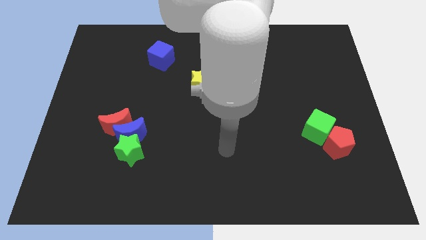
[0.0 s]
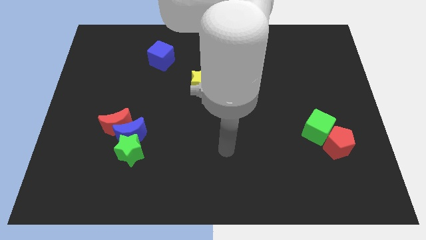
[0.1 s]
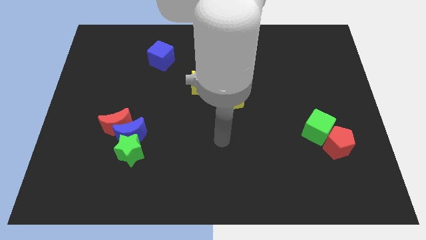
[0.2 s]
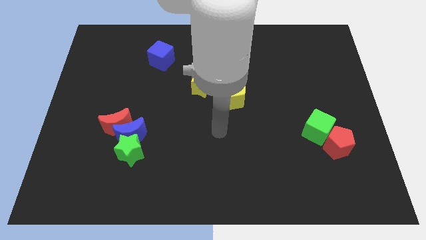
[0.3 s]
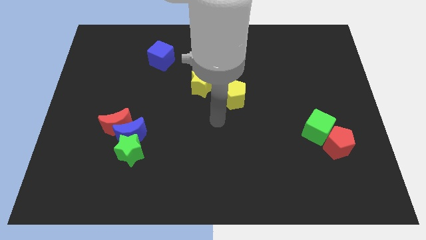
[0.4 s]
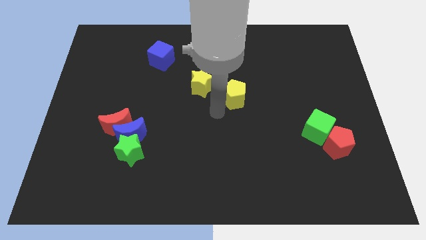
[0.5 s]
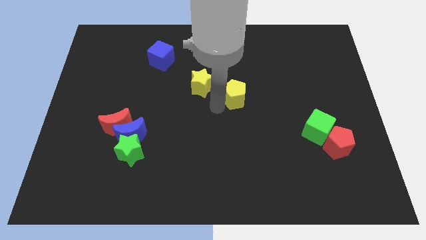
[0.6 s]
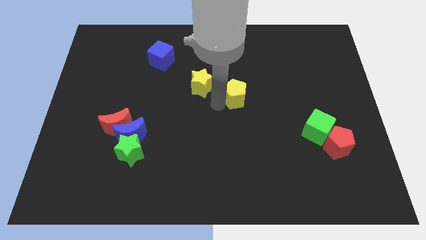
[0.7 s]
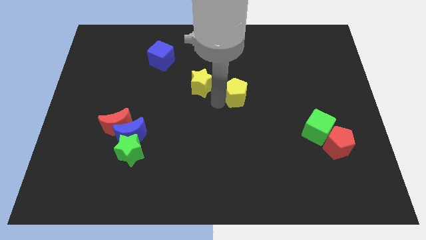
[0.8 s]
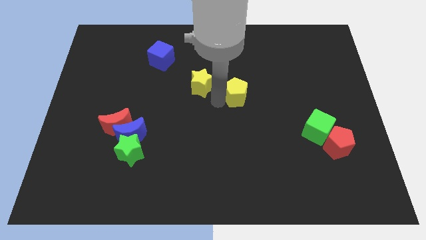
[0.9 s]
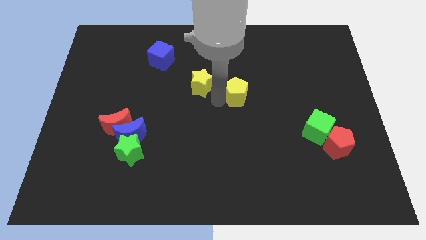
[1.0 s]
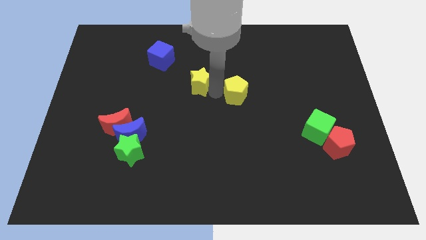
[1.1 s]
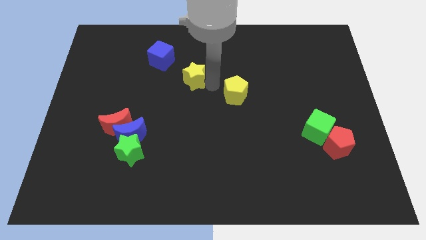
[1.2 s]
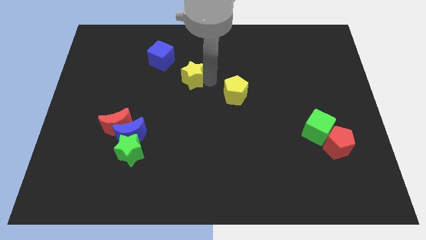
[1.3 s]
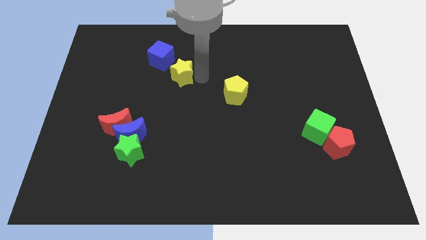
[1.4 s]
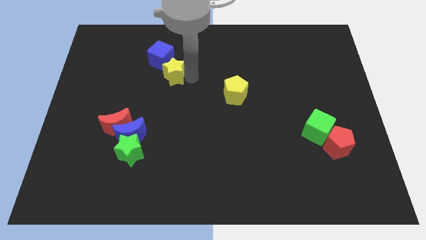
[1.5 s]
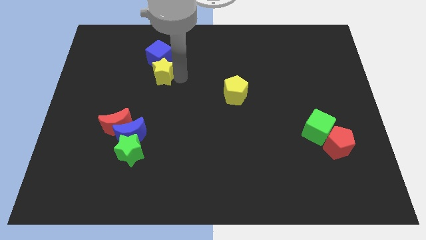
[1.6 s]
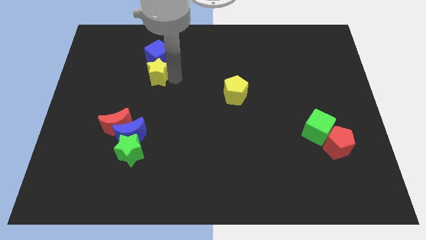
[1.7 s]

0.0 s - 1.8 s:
push the yellow star into the blue cube

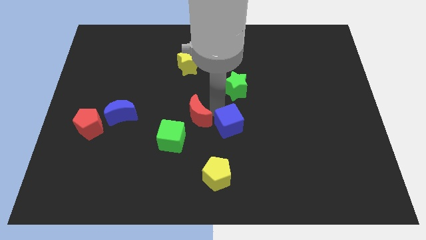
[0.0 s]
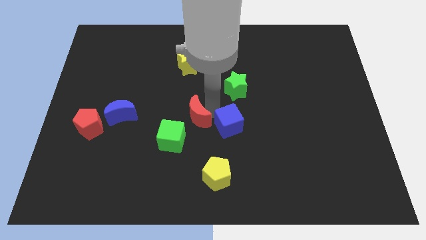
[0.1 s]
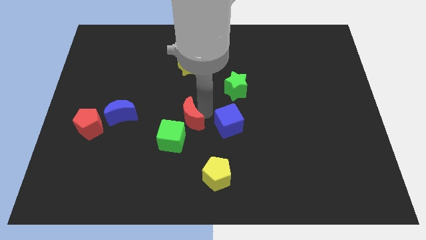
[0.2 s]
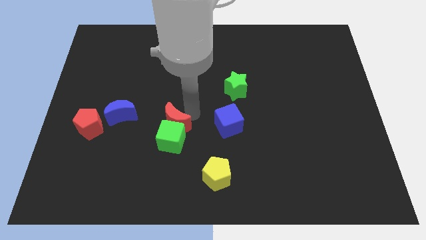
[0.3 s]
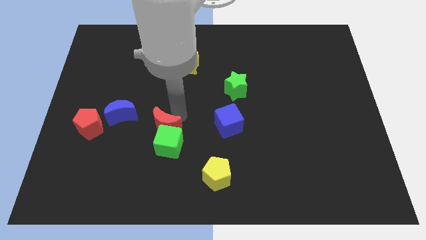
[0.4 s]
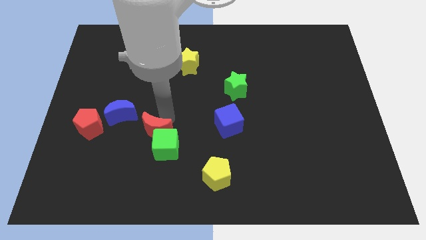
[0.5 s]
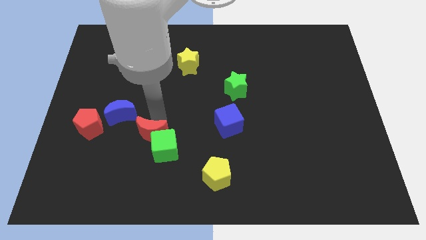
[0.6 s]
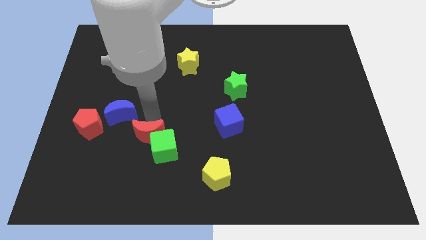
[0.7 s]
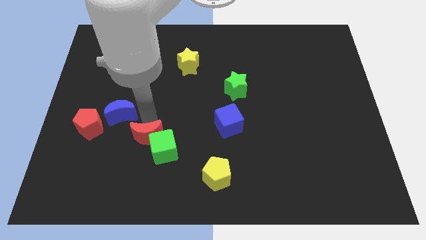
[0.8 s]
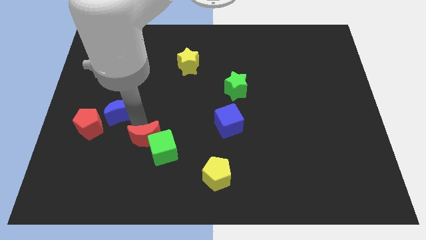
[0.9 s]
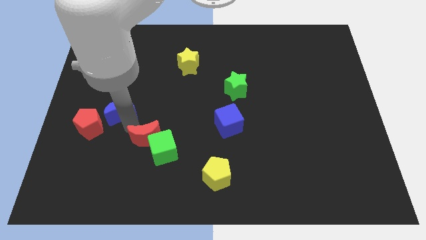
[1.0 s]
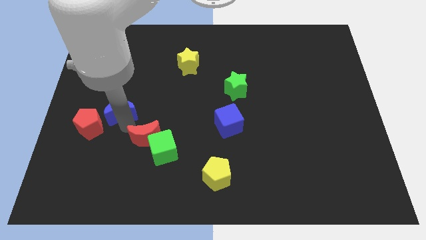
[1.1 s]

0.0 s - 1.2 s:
separate the red crescent from the blue cube

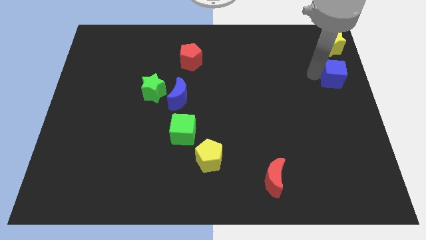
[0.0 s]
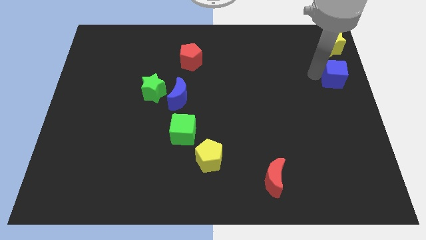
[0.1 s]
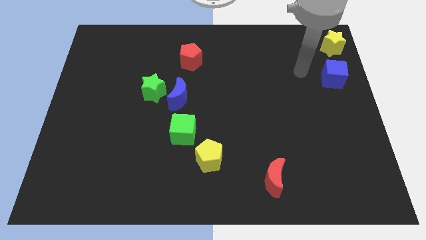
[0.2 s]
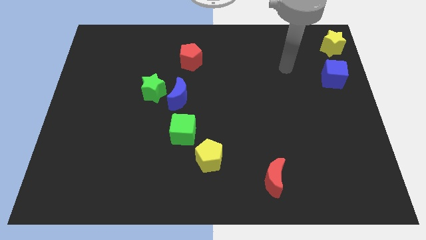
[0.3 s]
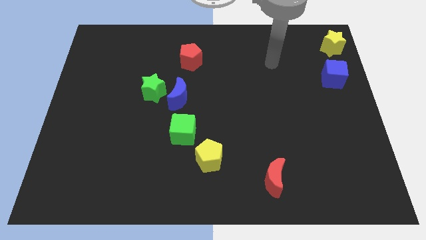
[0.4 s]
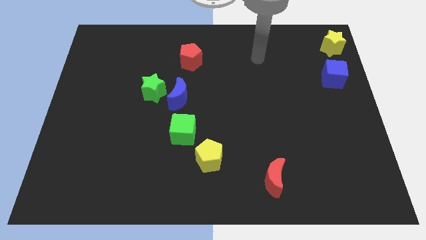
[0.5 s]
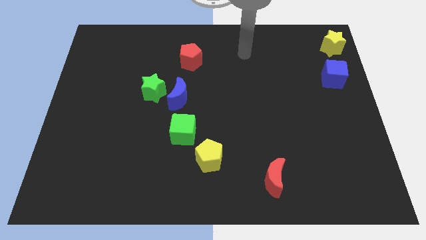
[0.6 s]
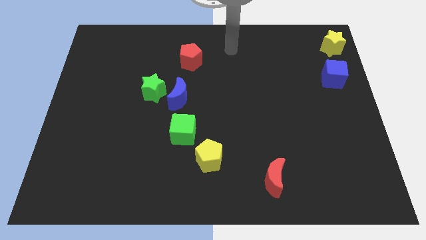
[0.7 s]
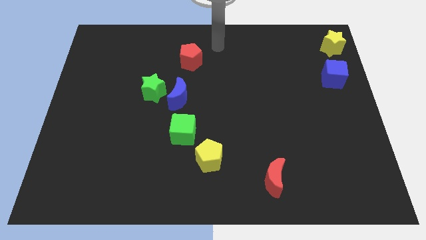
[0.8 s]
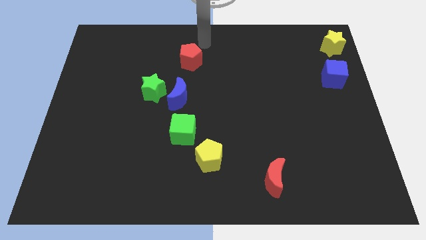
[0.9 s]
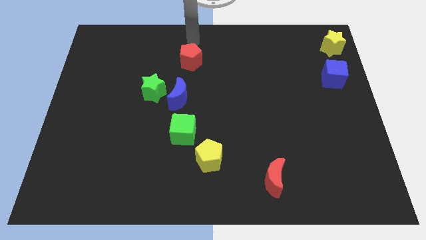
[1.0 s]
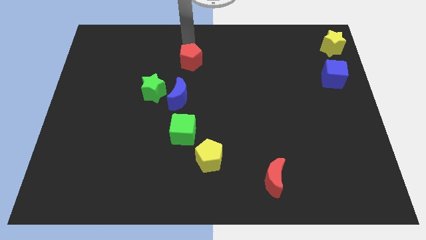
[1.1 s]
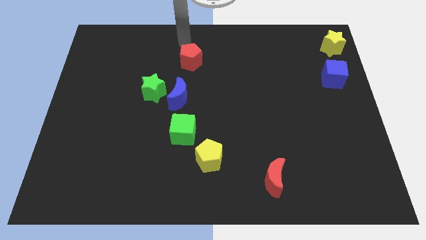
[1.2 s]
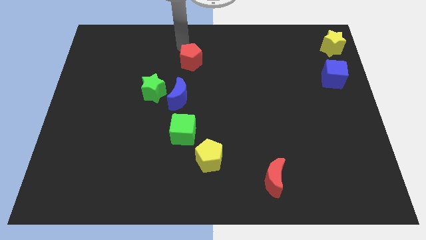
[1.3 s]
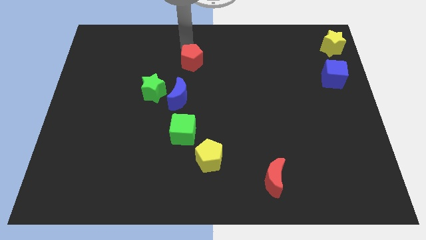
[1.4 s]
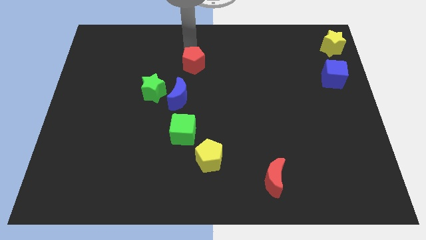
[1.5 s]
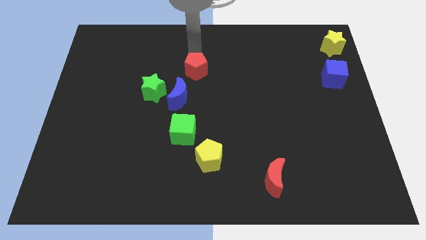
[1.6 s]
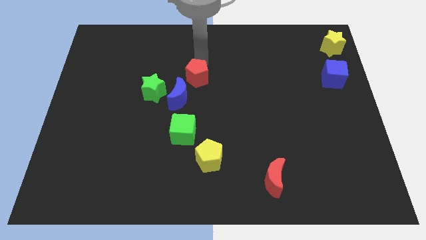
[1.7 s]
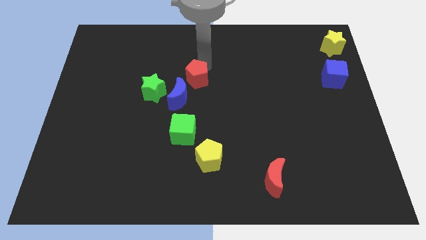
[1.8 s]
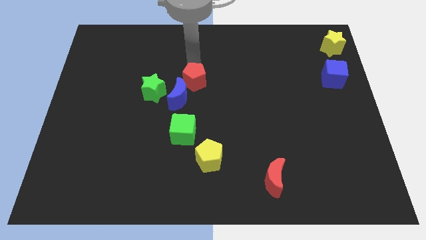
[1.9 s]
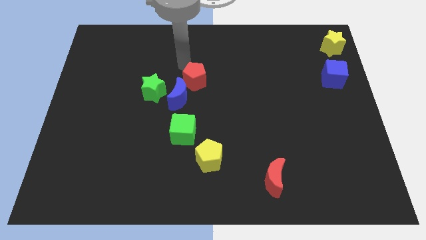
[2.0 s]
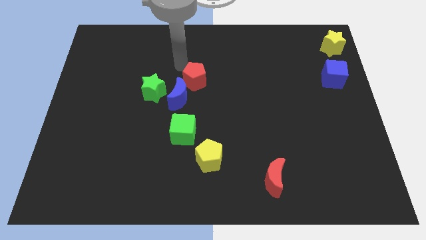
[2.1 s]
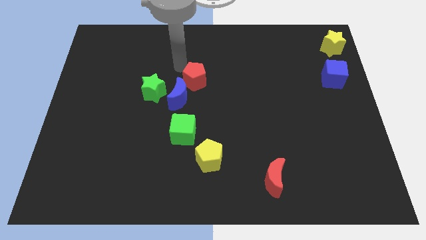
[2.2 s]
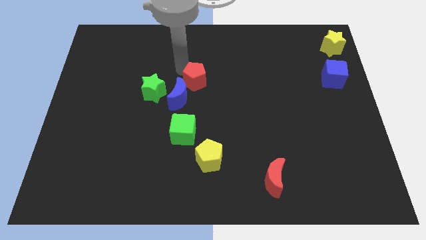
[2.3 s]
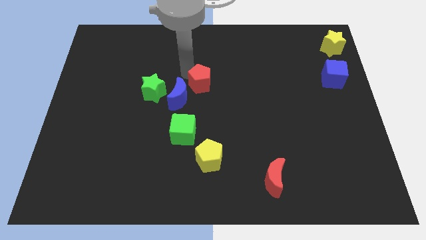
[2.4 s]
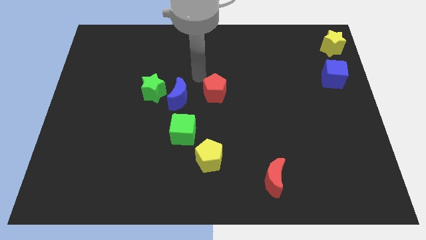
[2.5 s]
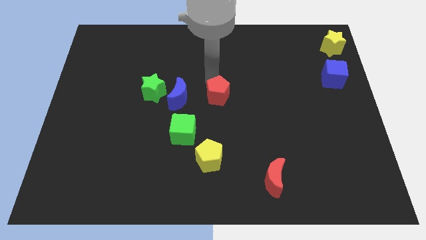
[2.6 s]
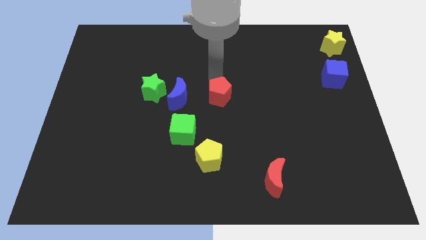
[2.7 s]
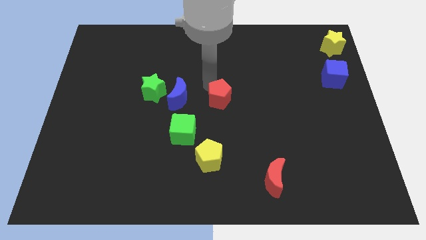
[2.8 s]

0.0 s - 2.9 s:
place red pentagon to the right of blue moon

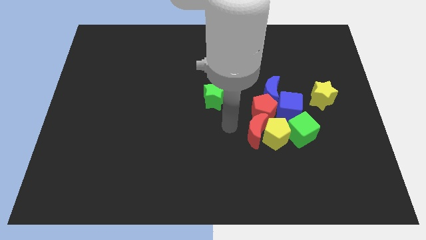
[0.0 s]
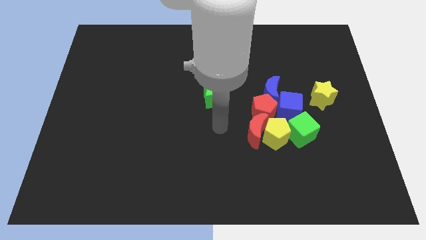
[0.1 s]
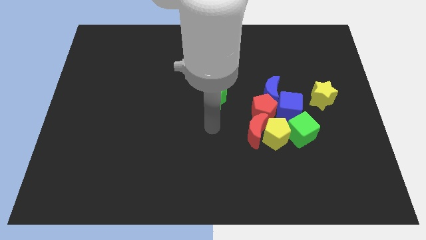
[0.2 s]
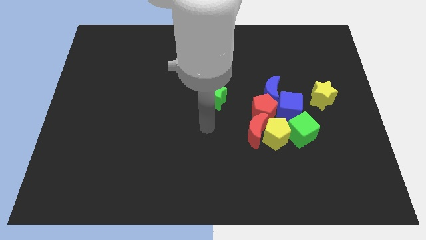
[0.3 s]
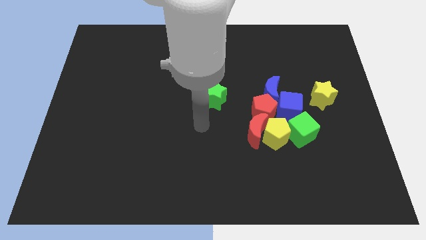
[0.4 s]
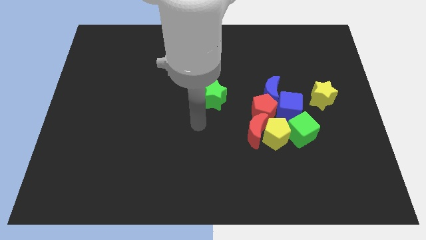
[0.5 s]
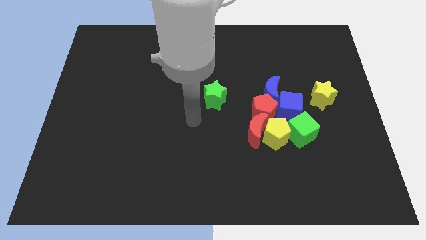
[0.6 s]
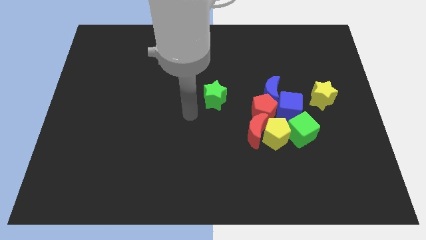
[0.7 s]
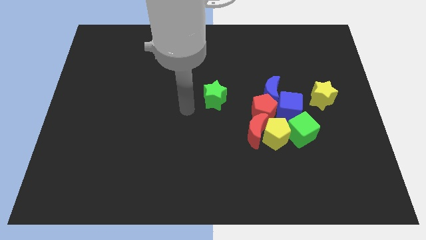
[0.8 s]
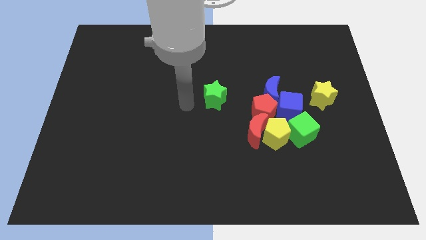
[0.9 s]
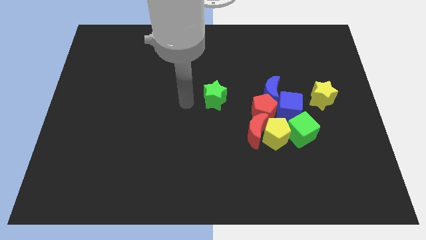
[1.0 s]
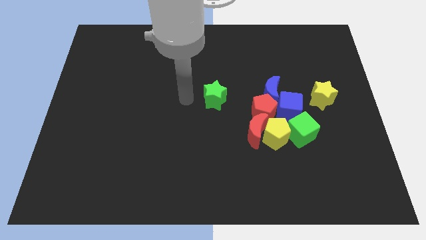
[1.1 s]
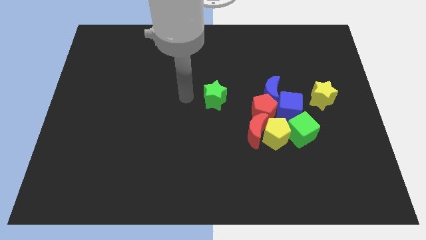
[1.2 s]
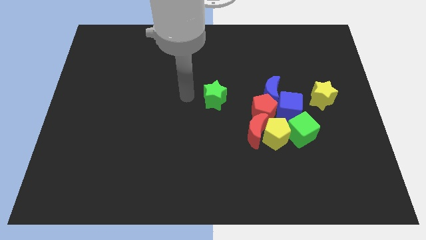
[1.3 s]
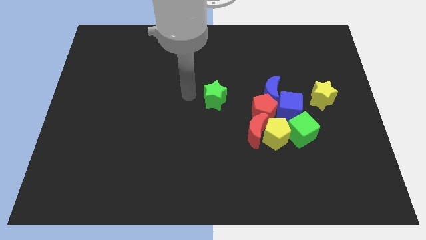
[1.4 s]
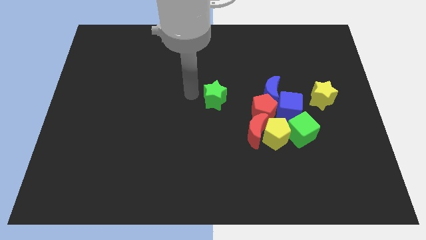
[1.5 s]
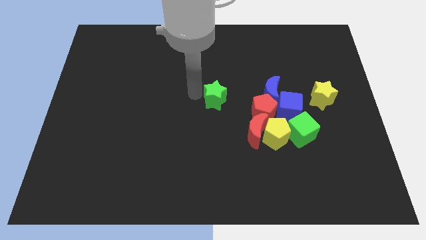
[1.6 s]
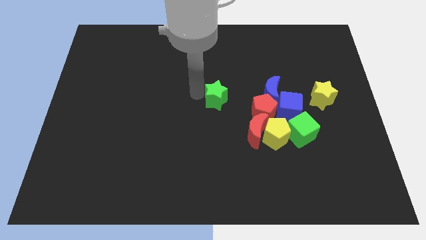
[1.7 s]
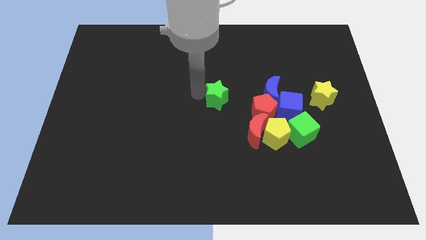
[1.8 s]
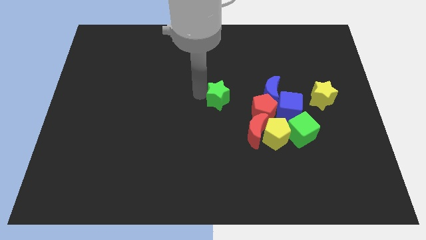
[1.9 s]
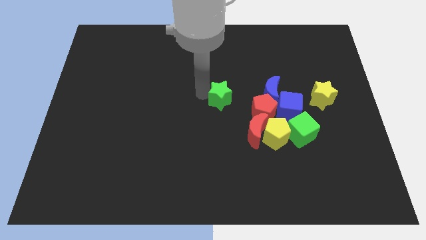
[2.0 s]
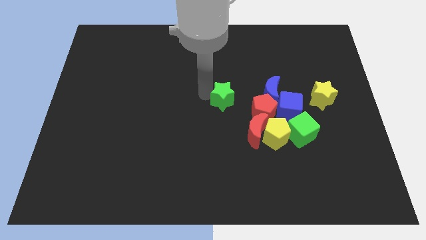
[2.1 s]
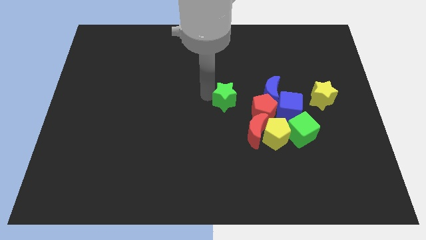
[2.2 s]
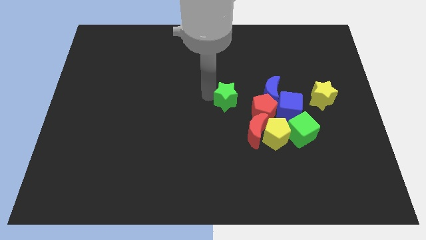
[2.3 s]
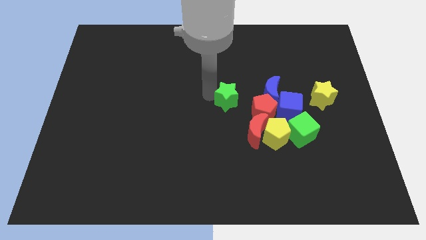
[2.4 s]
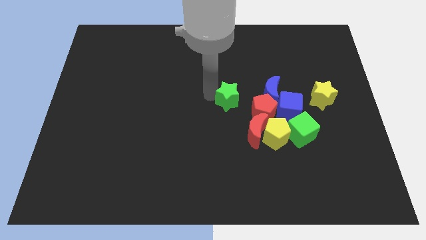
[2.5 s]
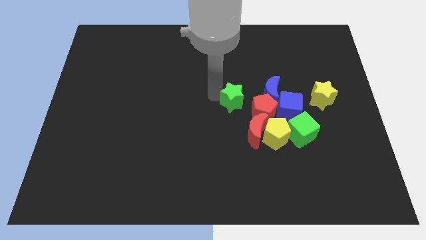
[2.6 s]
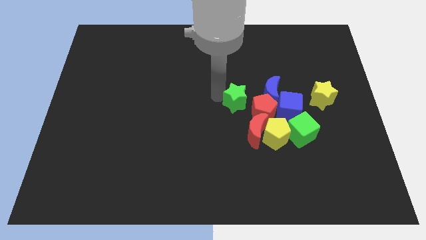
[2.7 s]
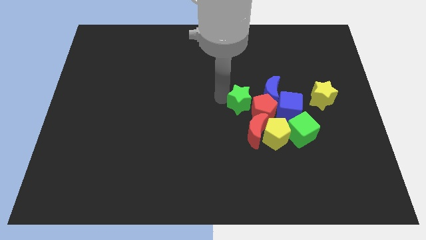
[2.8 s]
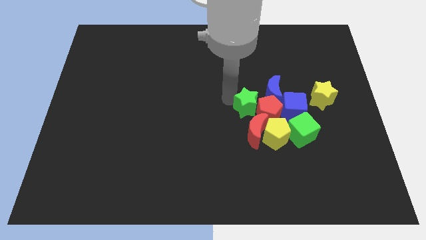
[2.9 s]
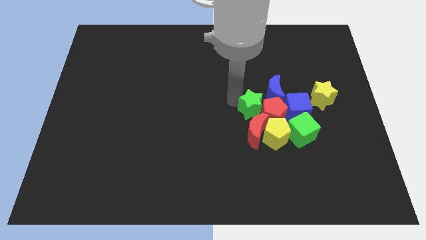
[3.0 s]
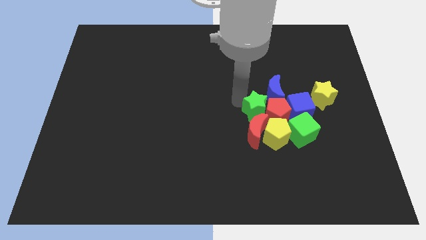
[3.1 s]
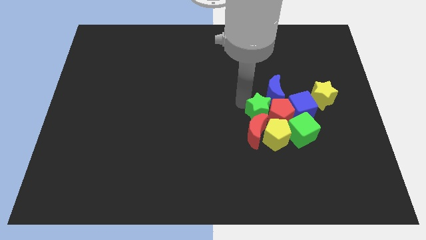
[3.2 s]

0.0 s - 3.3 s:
add the green star to the group of blocks

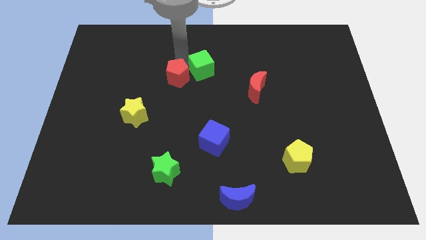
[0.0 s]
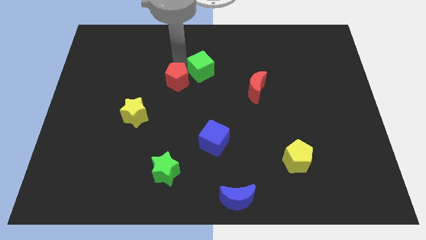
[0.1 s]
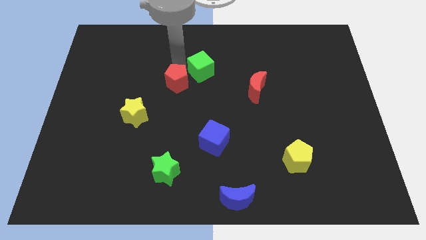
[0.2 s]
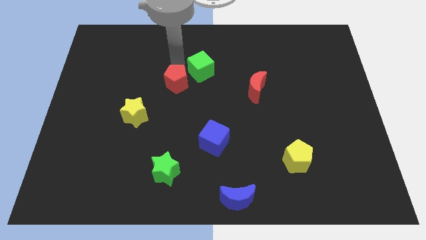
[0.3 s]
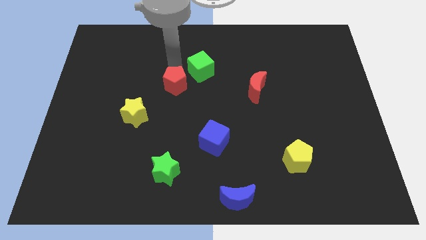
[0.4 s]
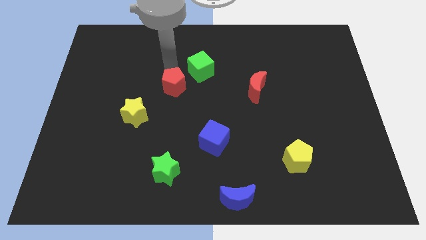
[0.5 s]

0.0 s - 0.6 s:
separate red pentagon from green cube
